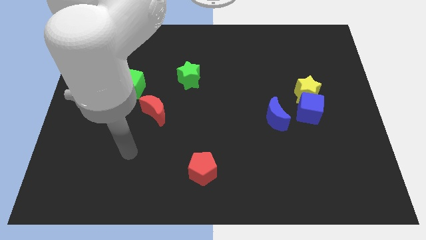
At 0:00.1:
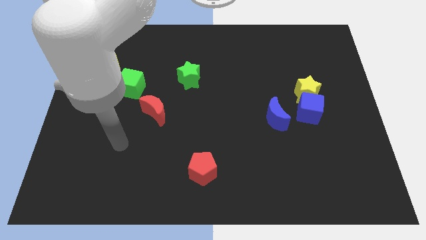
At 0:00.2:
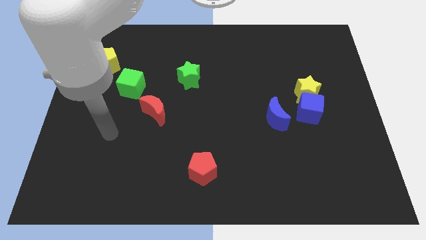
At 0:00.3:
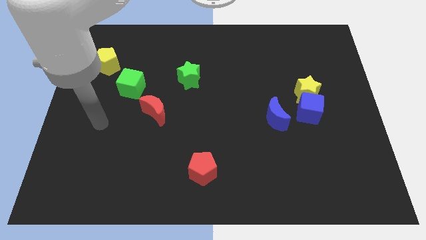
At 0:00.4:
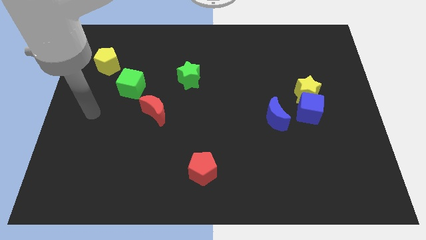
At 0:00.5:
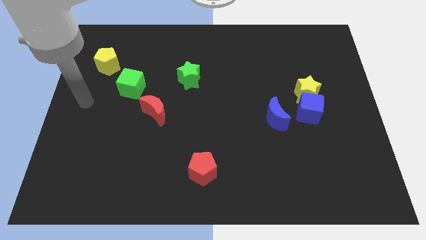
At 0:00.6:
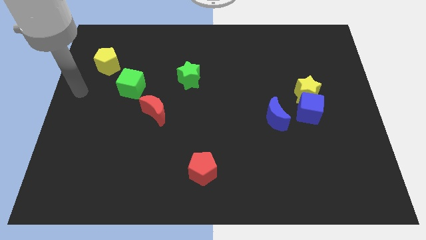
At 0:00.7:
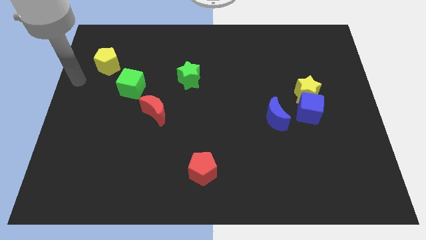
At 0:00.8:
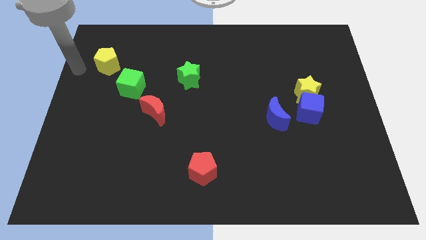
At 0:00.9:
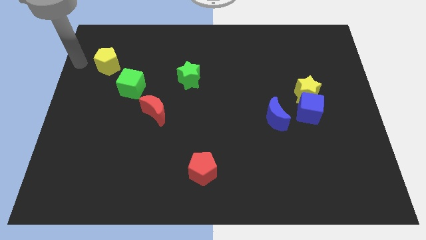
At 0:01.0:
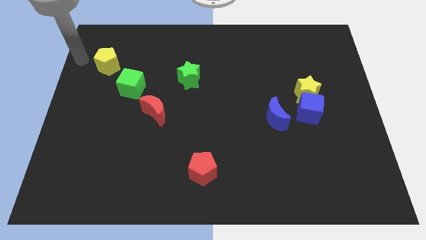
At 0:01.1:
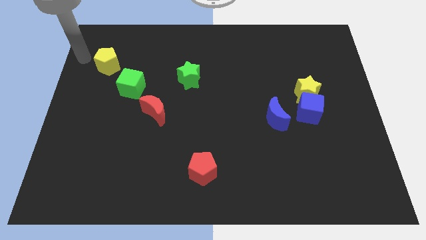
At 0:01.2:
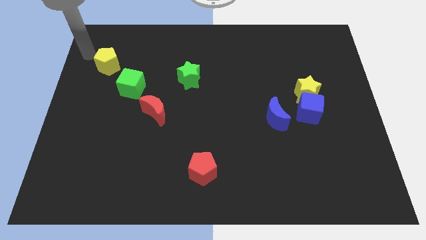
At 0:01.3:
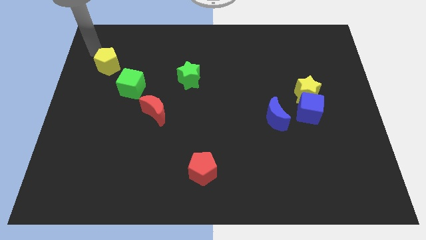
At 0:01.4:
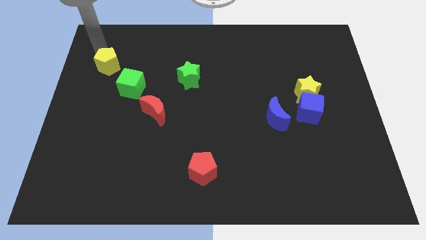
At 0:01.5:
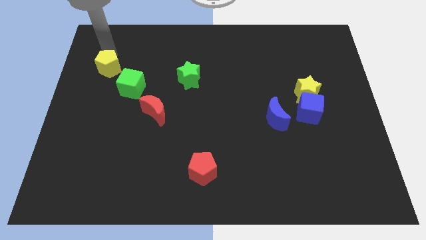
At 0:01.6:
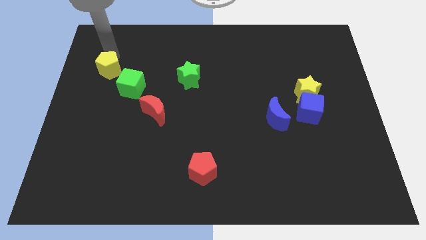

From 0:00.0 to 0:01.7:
move your arm towards the yellow pentagon

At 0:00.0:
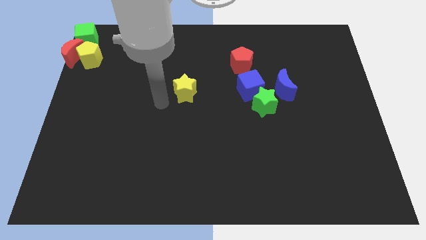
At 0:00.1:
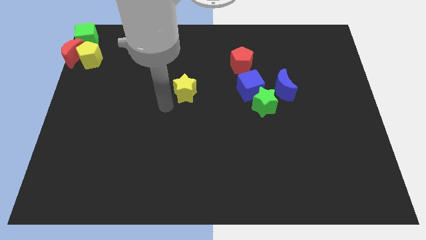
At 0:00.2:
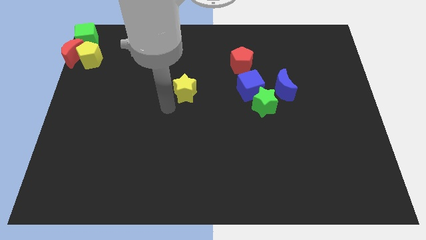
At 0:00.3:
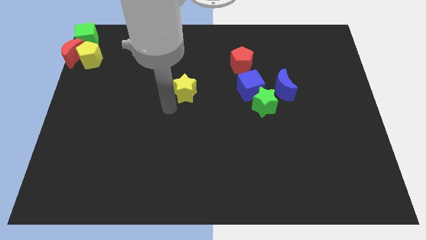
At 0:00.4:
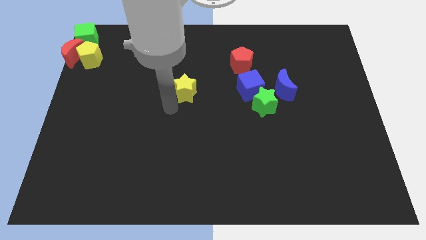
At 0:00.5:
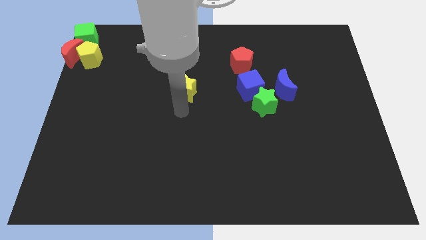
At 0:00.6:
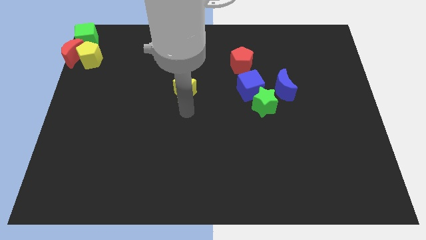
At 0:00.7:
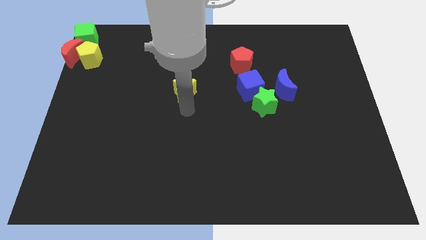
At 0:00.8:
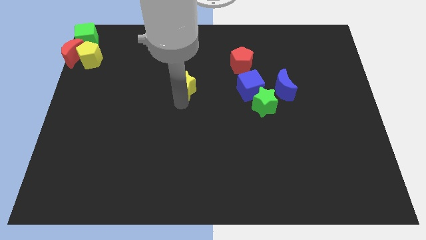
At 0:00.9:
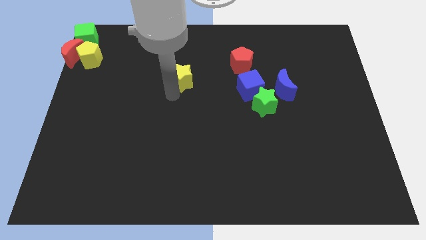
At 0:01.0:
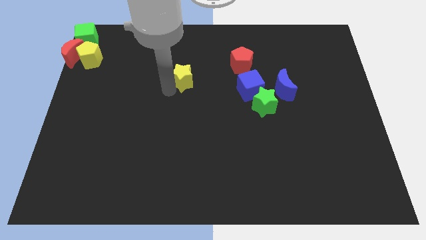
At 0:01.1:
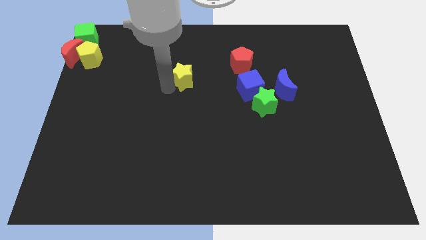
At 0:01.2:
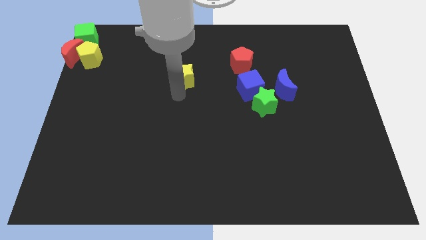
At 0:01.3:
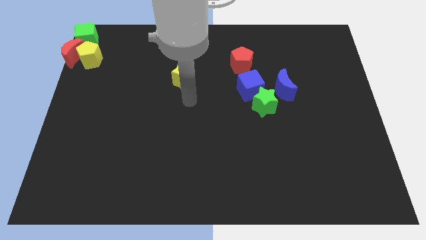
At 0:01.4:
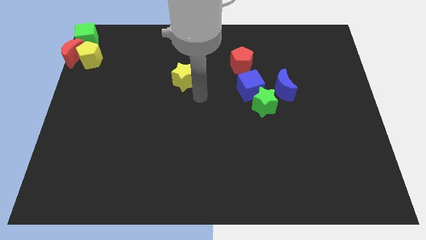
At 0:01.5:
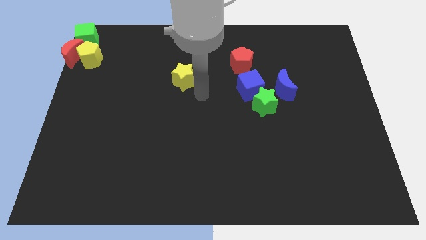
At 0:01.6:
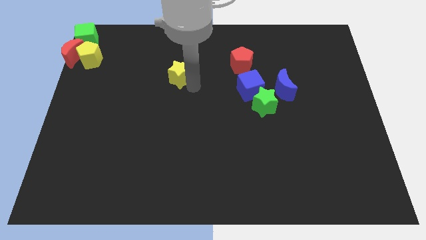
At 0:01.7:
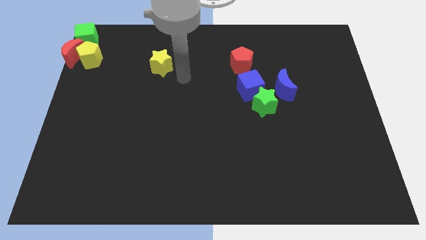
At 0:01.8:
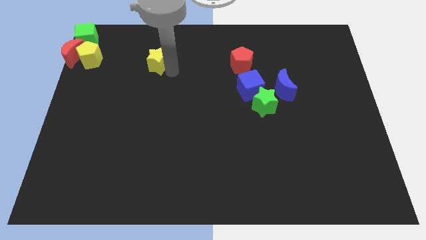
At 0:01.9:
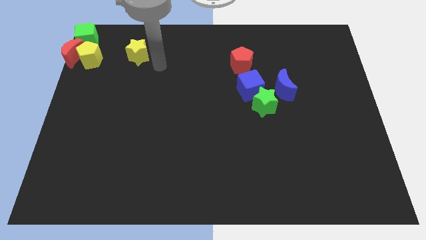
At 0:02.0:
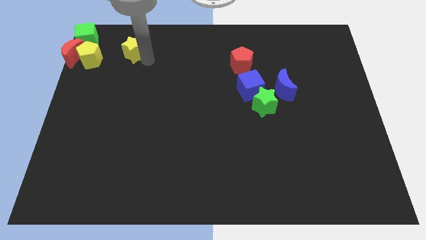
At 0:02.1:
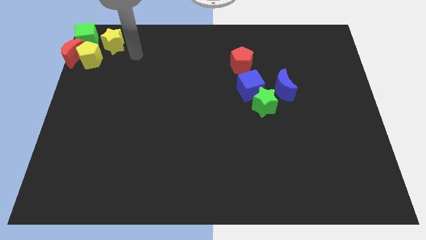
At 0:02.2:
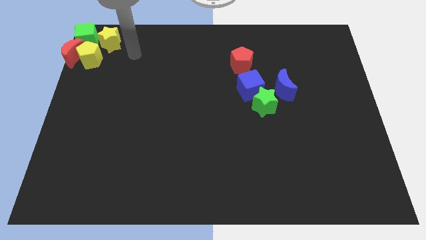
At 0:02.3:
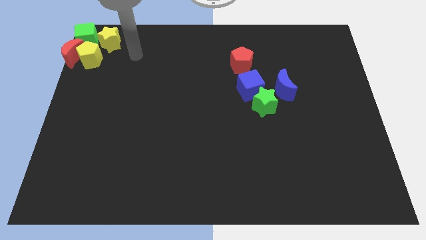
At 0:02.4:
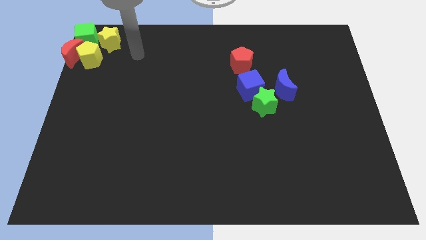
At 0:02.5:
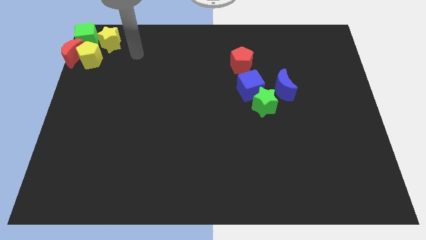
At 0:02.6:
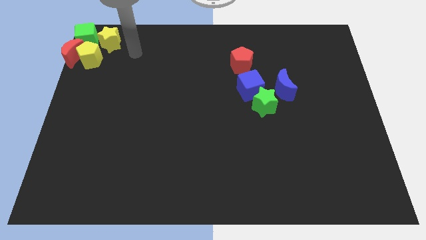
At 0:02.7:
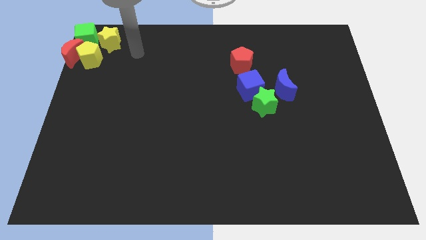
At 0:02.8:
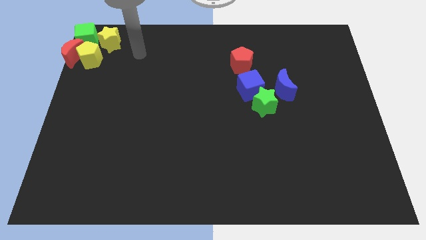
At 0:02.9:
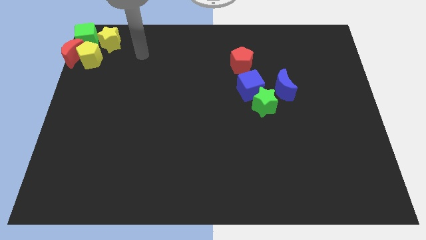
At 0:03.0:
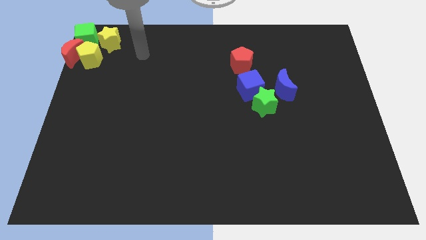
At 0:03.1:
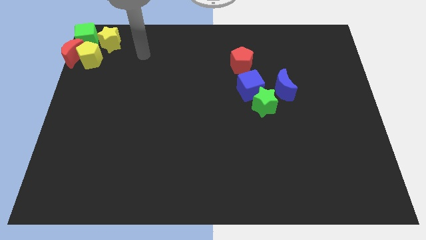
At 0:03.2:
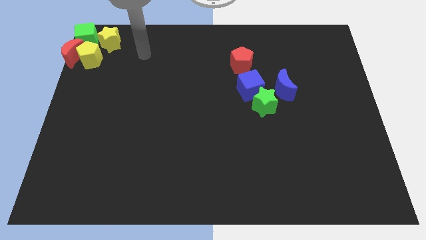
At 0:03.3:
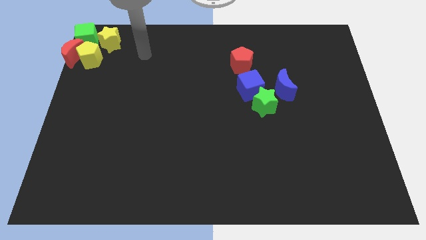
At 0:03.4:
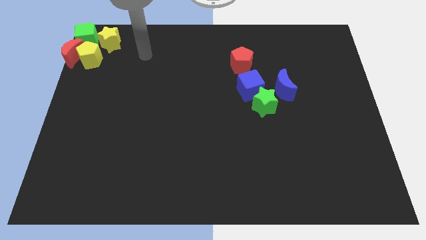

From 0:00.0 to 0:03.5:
move the yellow star diagonally top right to the yellow pentagon

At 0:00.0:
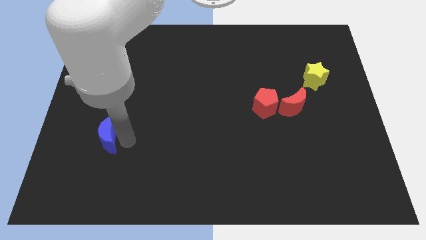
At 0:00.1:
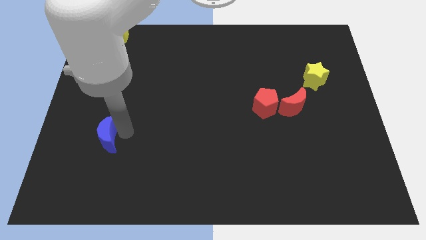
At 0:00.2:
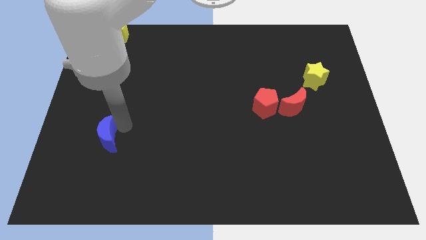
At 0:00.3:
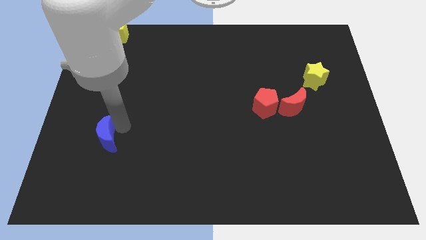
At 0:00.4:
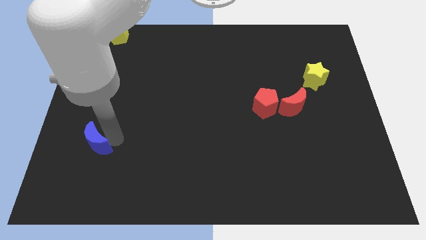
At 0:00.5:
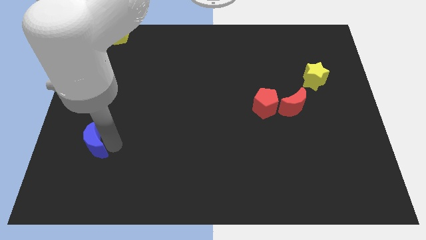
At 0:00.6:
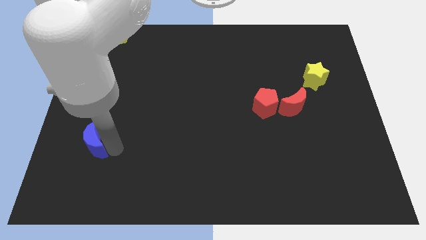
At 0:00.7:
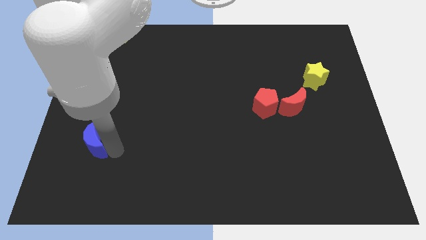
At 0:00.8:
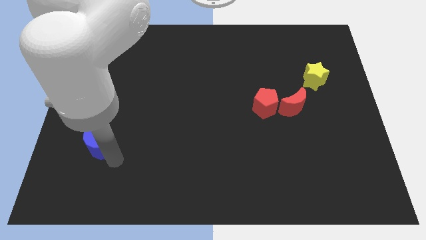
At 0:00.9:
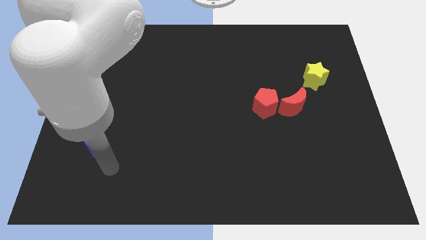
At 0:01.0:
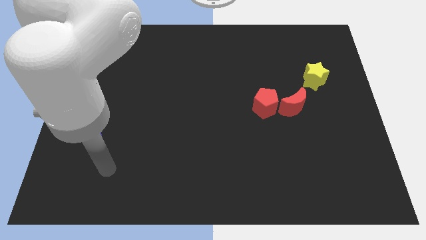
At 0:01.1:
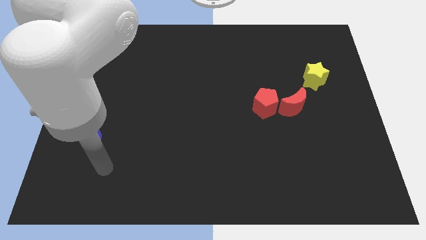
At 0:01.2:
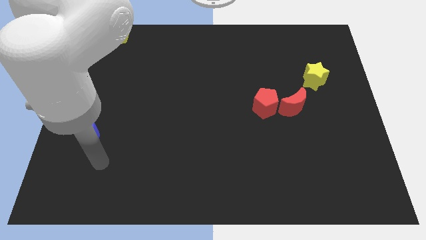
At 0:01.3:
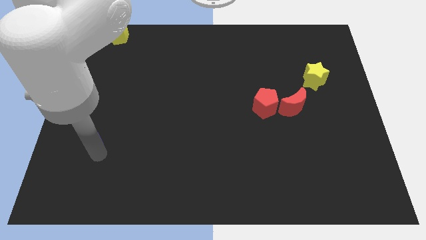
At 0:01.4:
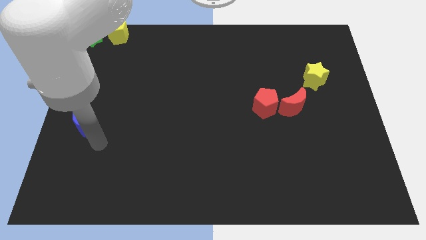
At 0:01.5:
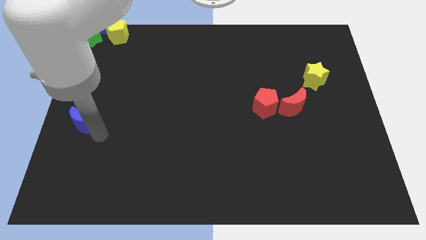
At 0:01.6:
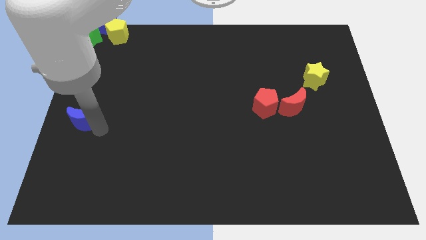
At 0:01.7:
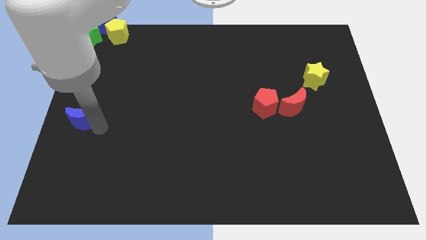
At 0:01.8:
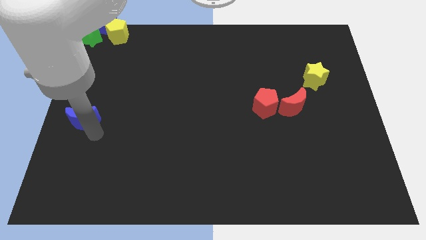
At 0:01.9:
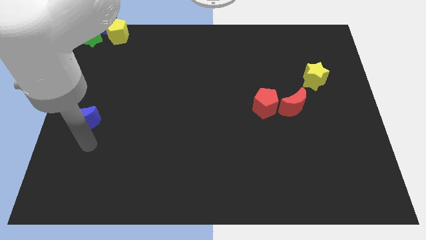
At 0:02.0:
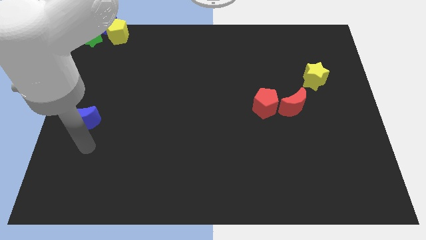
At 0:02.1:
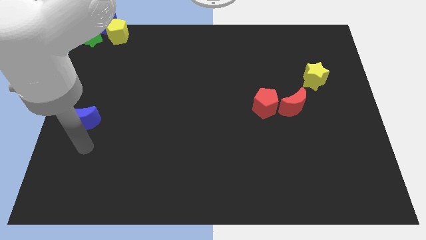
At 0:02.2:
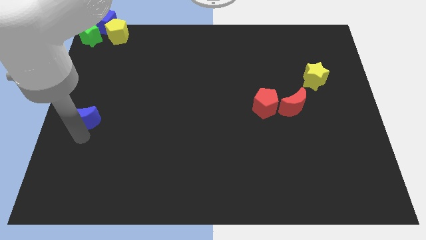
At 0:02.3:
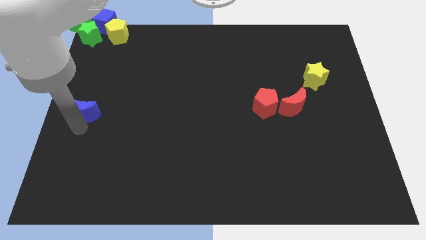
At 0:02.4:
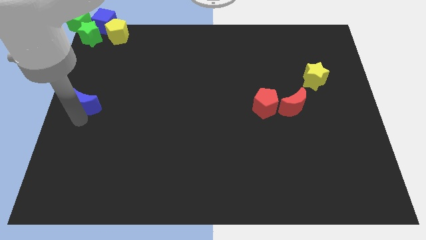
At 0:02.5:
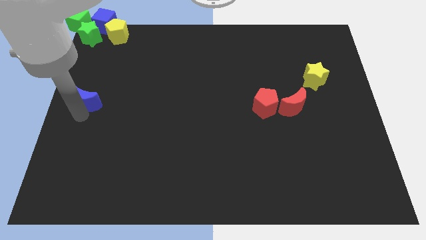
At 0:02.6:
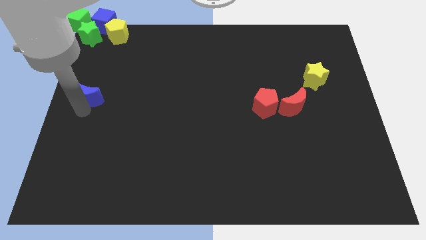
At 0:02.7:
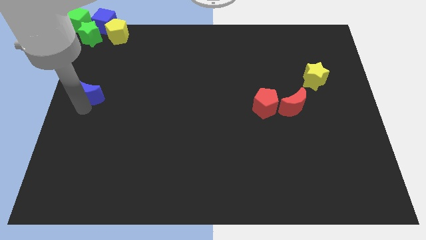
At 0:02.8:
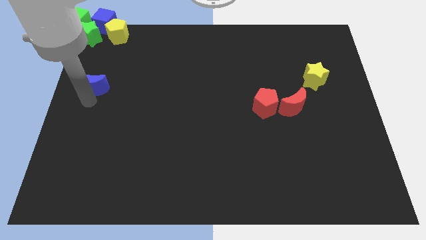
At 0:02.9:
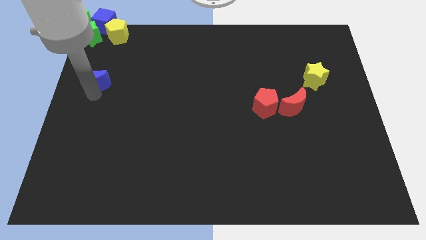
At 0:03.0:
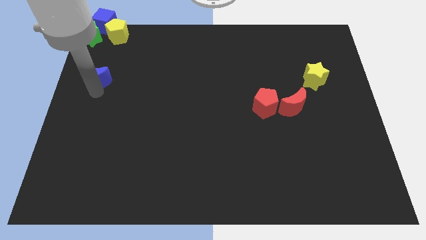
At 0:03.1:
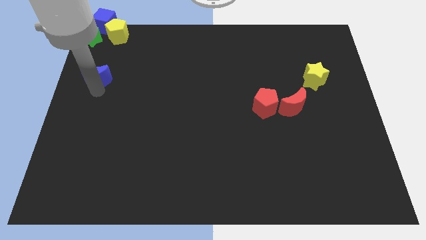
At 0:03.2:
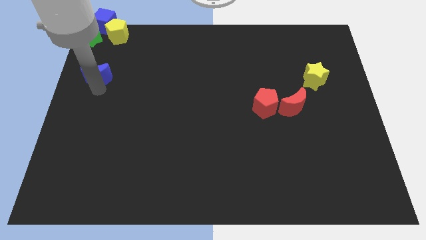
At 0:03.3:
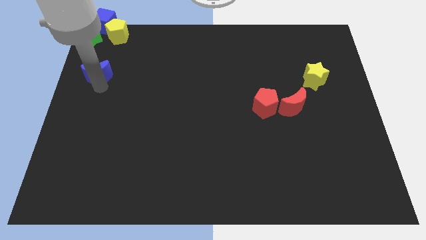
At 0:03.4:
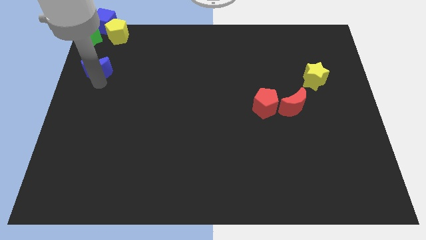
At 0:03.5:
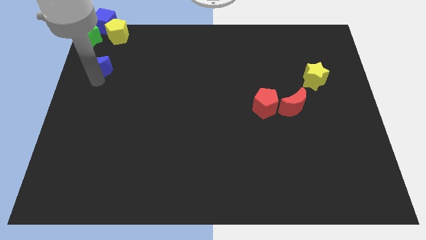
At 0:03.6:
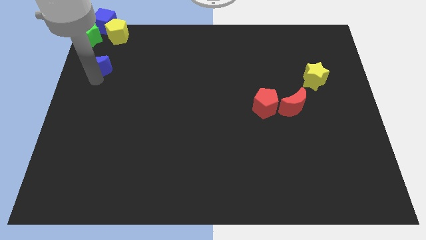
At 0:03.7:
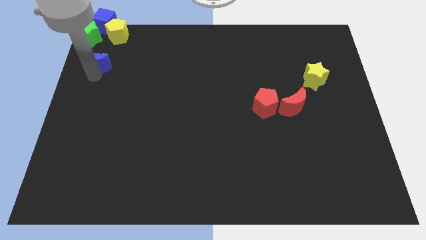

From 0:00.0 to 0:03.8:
place the blue moon below the green star
